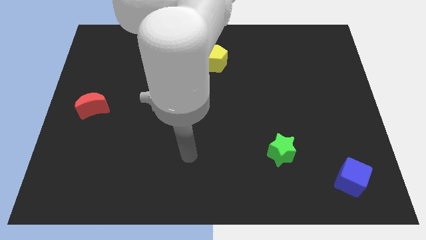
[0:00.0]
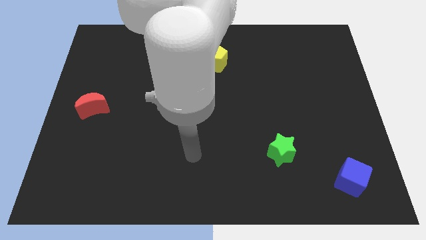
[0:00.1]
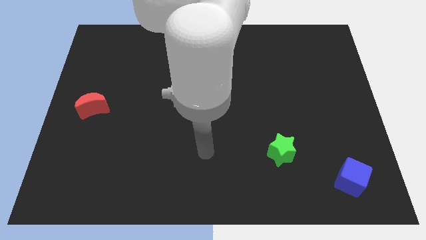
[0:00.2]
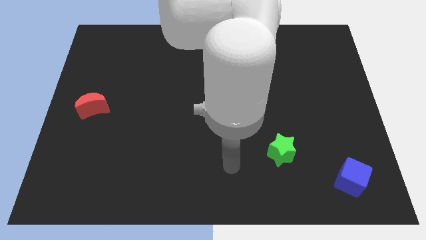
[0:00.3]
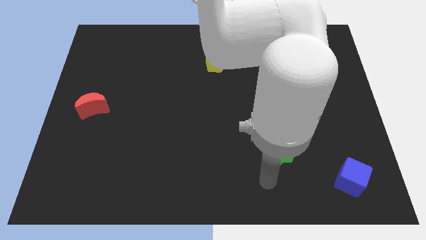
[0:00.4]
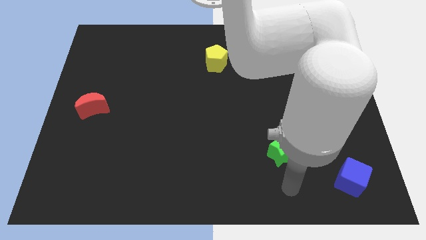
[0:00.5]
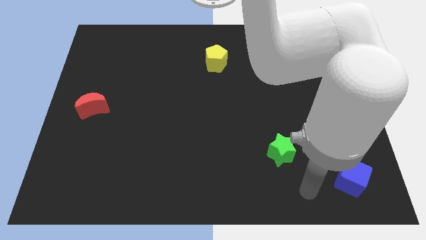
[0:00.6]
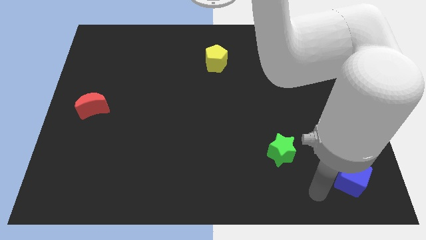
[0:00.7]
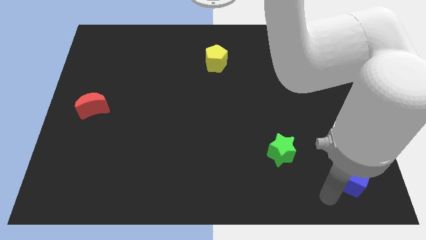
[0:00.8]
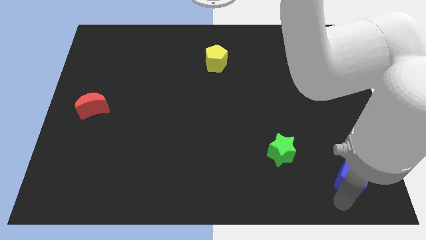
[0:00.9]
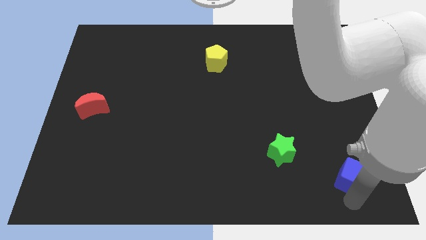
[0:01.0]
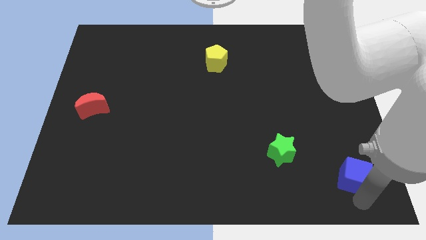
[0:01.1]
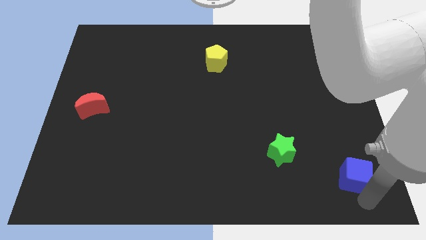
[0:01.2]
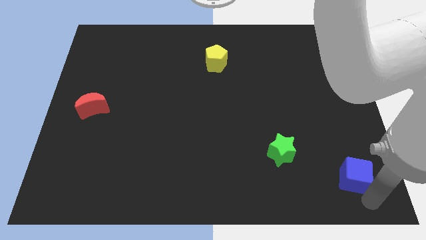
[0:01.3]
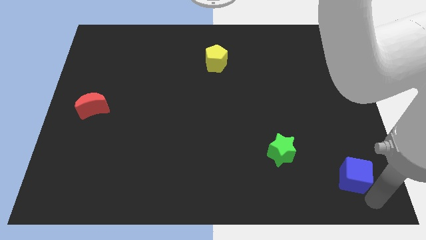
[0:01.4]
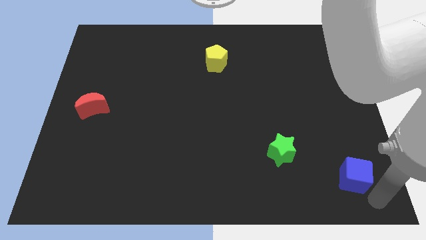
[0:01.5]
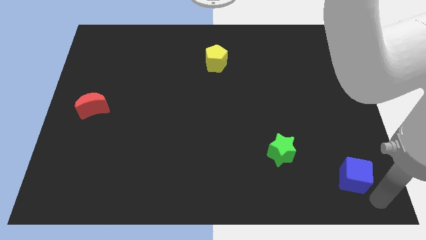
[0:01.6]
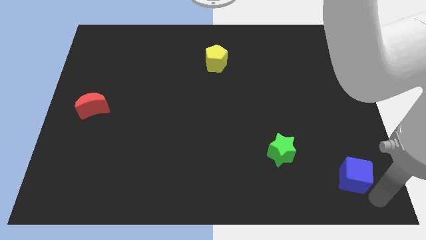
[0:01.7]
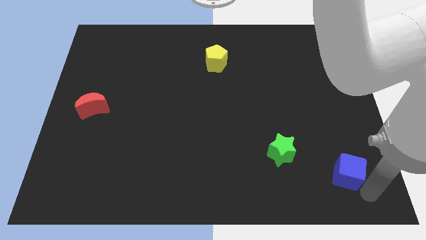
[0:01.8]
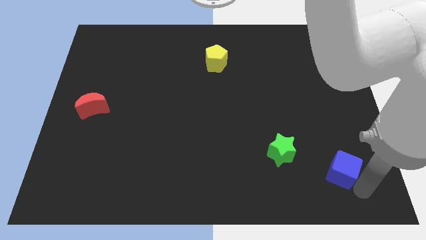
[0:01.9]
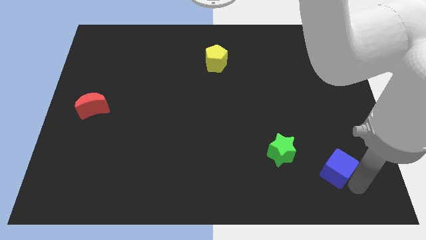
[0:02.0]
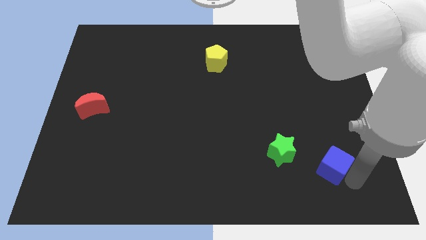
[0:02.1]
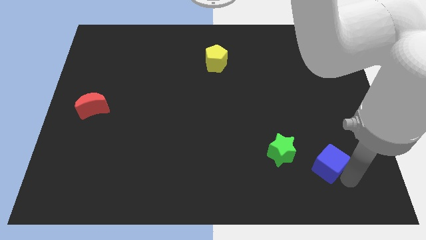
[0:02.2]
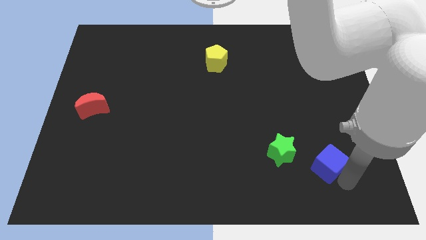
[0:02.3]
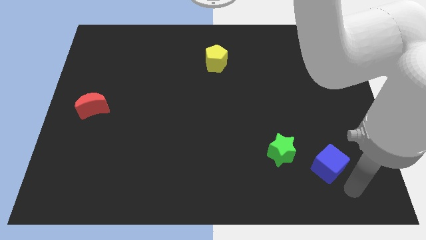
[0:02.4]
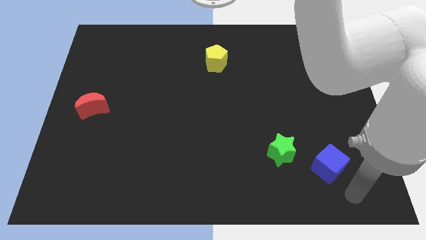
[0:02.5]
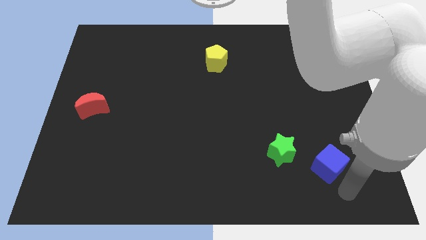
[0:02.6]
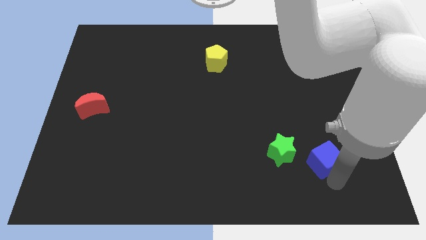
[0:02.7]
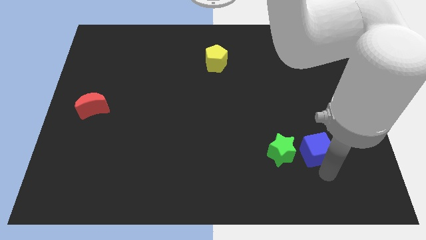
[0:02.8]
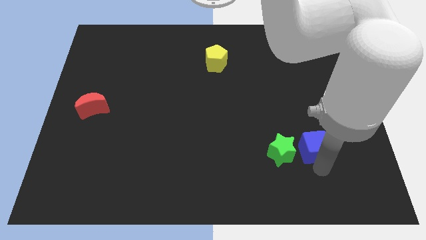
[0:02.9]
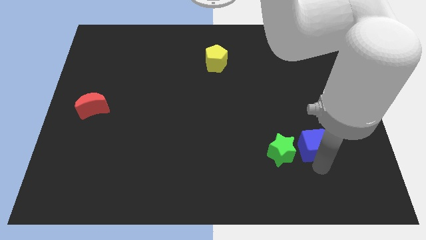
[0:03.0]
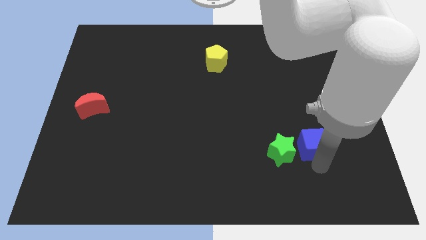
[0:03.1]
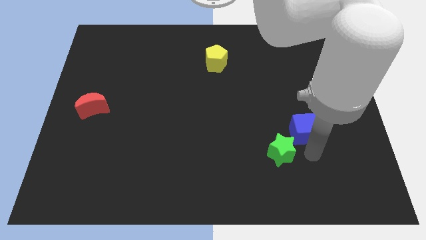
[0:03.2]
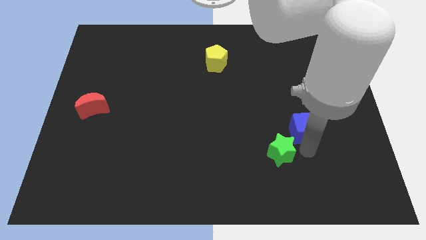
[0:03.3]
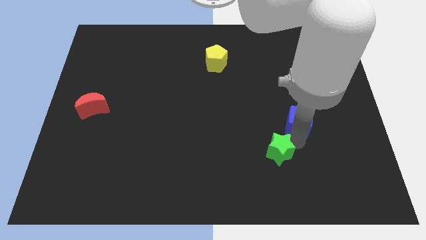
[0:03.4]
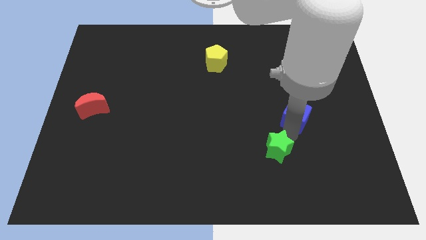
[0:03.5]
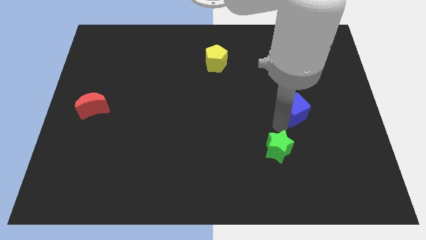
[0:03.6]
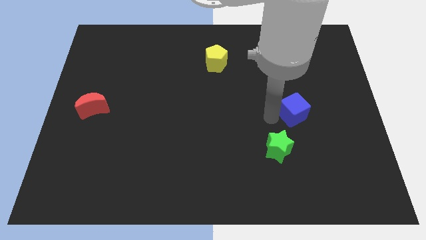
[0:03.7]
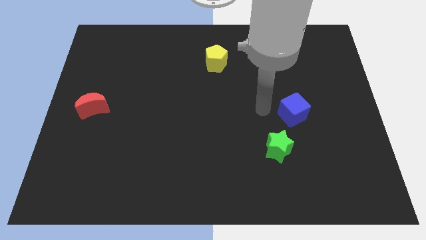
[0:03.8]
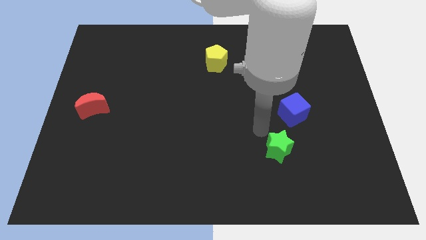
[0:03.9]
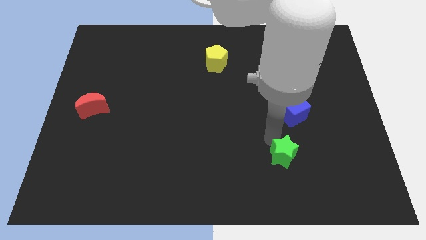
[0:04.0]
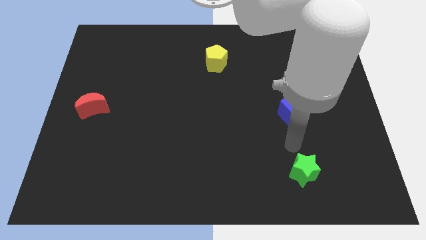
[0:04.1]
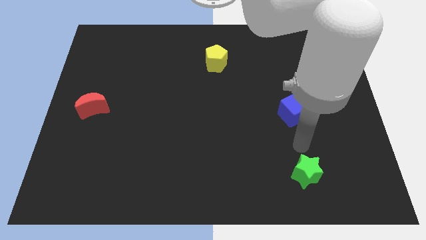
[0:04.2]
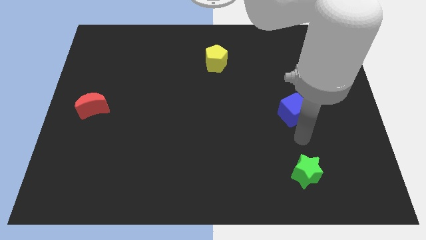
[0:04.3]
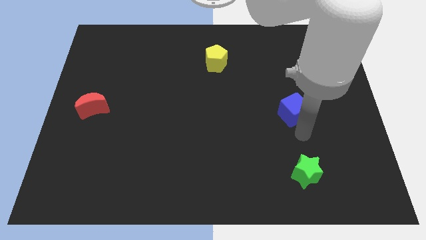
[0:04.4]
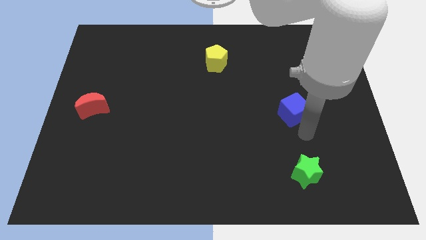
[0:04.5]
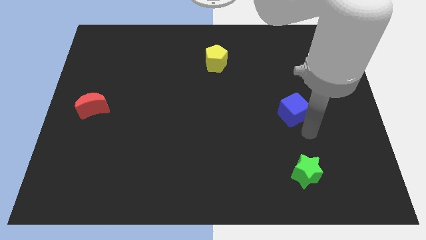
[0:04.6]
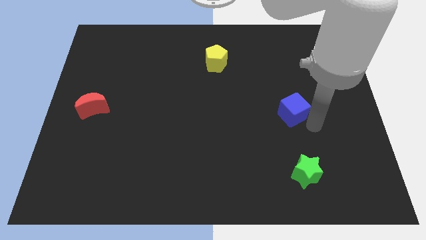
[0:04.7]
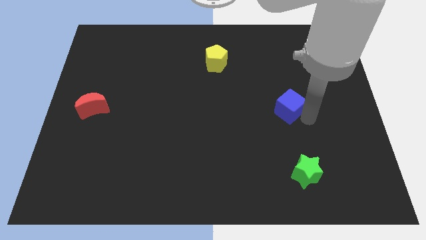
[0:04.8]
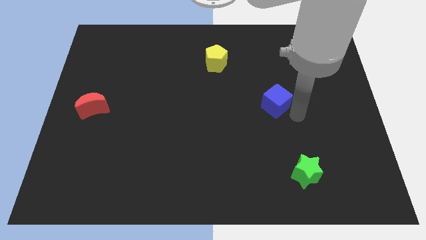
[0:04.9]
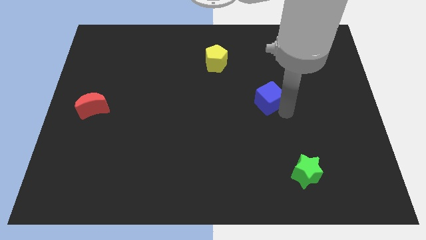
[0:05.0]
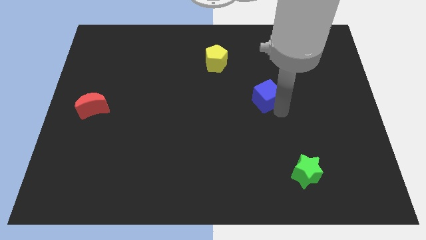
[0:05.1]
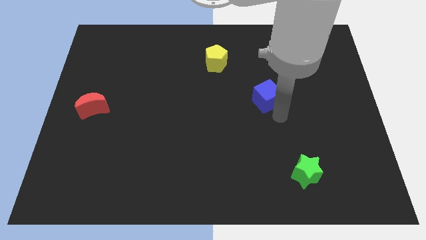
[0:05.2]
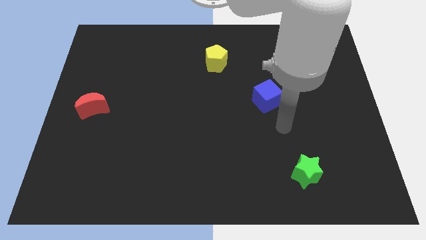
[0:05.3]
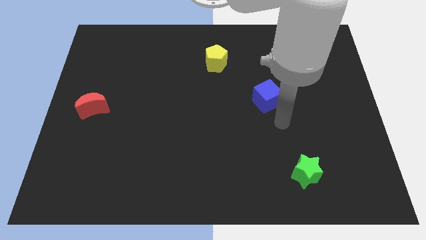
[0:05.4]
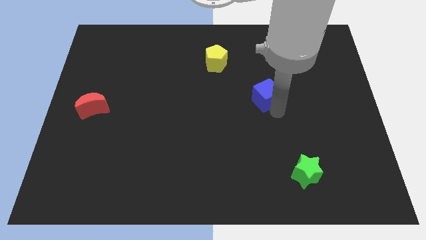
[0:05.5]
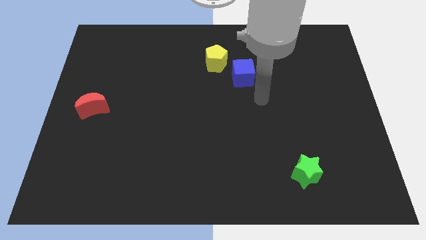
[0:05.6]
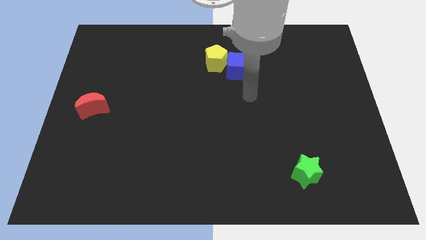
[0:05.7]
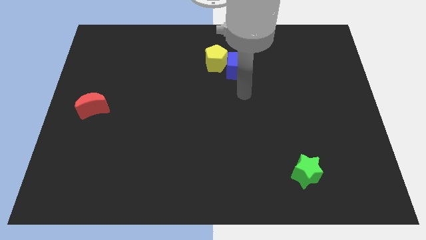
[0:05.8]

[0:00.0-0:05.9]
push the blue cube to the yellow pentagon

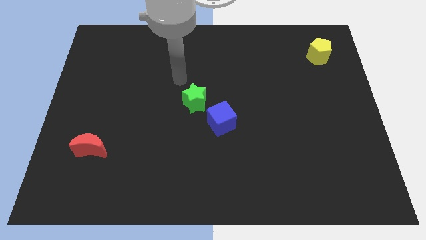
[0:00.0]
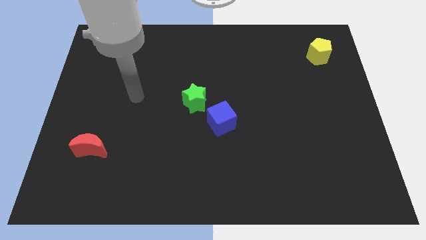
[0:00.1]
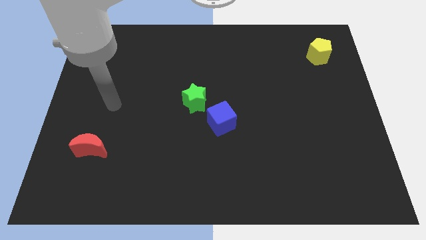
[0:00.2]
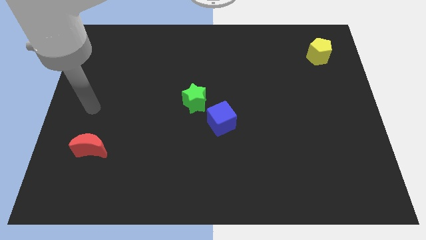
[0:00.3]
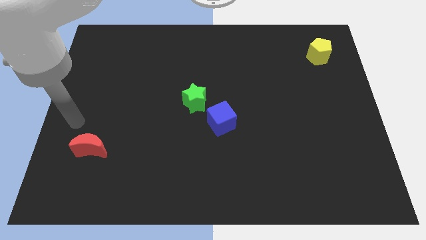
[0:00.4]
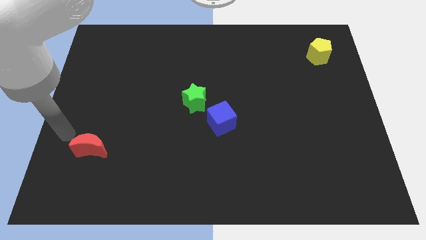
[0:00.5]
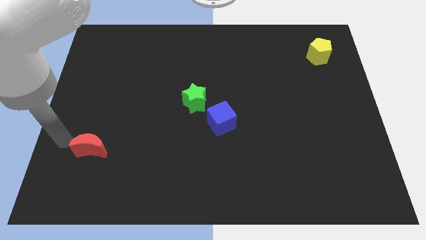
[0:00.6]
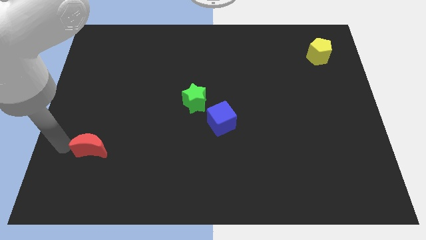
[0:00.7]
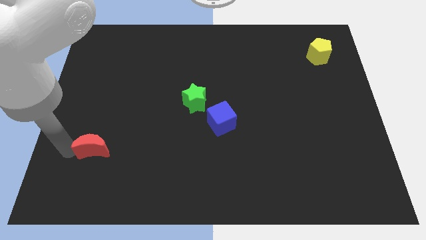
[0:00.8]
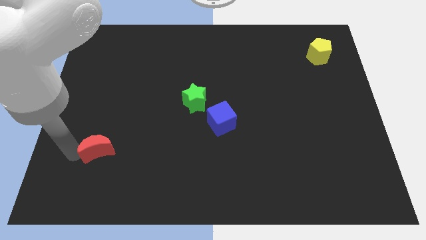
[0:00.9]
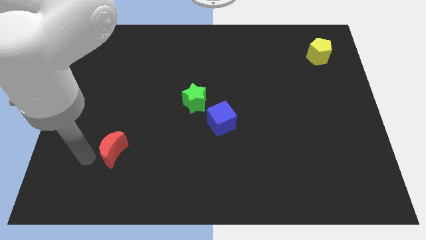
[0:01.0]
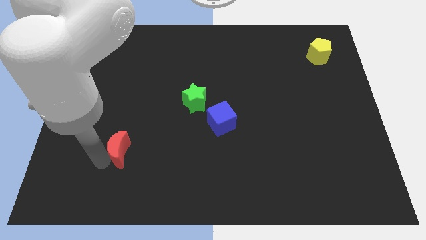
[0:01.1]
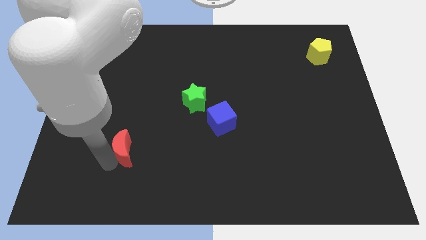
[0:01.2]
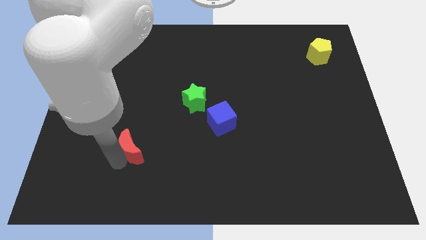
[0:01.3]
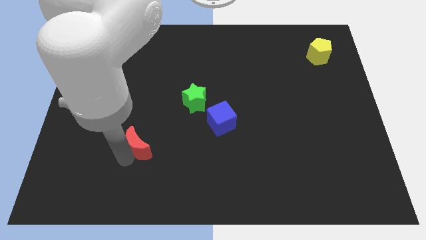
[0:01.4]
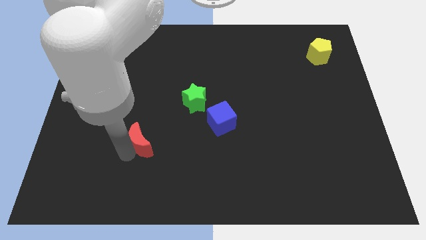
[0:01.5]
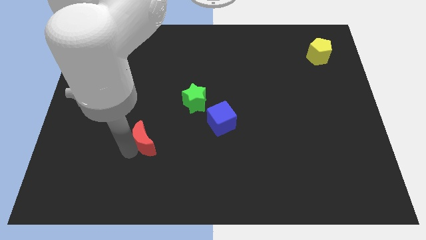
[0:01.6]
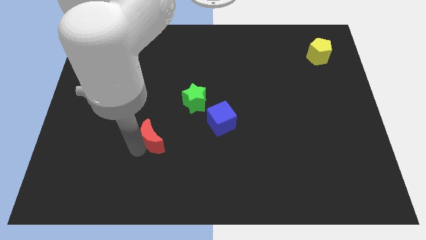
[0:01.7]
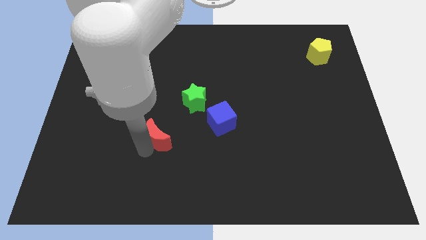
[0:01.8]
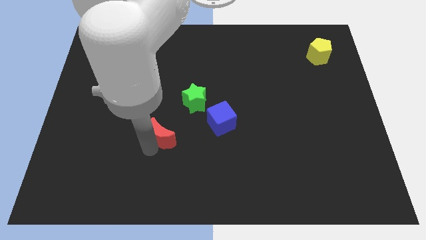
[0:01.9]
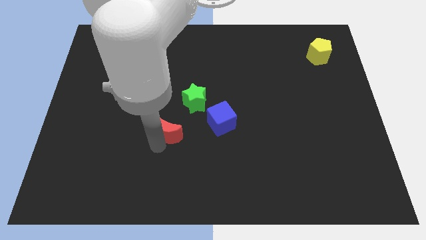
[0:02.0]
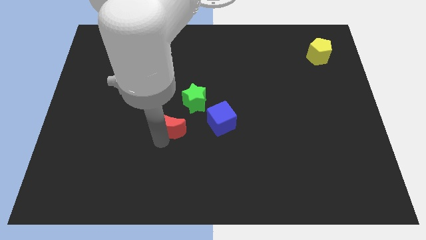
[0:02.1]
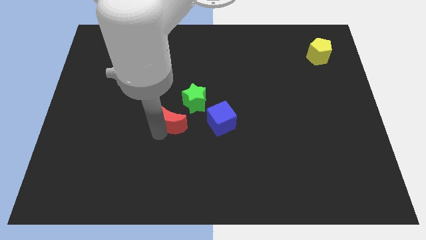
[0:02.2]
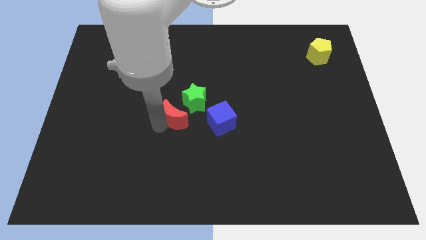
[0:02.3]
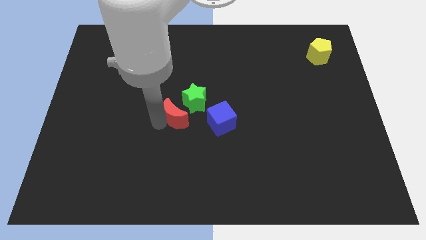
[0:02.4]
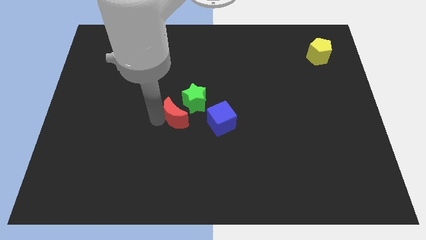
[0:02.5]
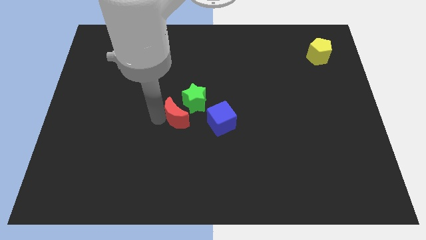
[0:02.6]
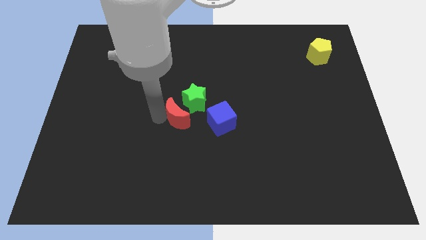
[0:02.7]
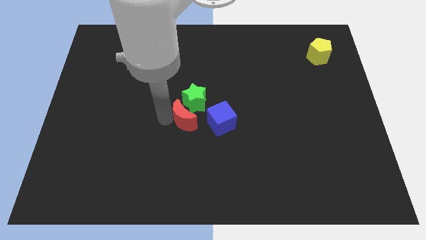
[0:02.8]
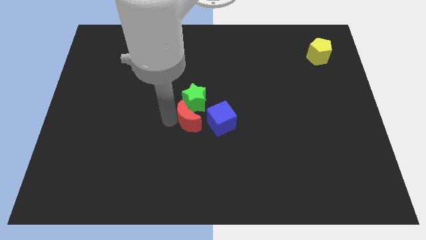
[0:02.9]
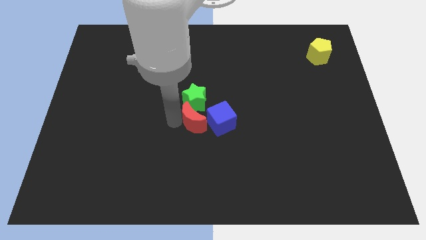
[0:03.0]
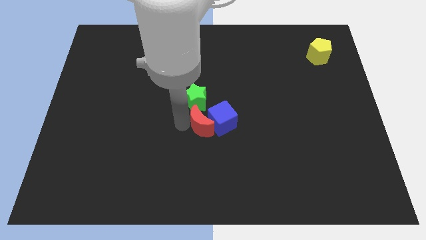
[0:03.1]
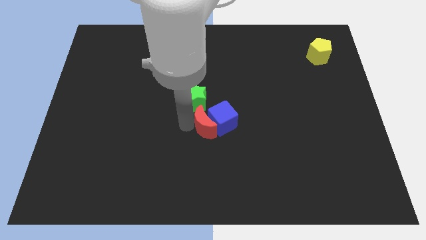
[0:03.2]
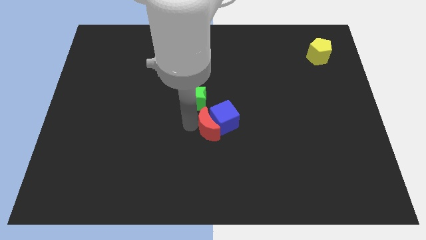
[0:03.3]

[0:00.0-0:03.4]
slide the red moon next to the cube
